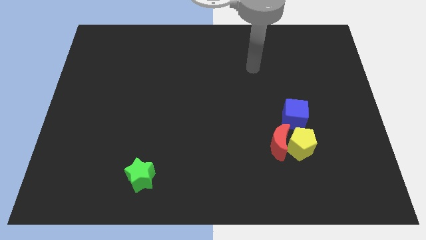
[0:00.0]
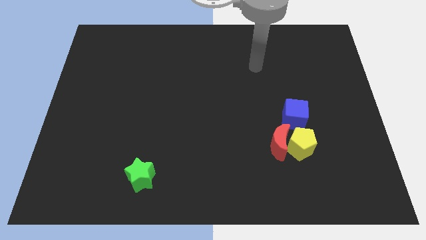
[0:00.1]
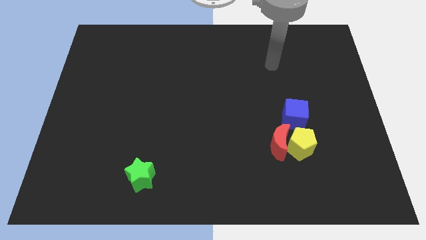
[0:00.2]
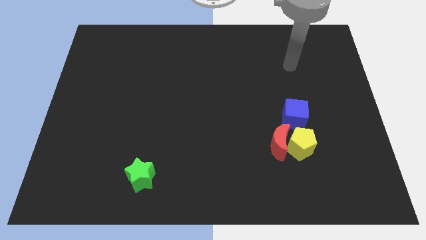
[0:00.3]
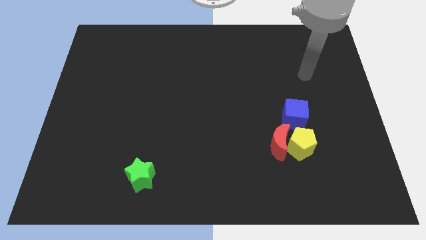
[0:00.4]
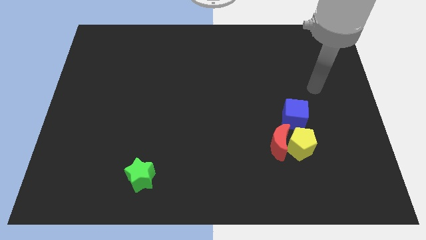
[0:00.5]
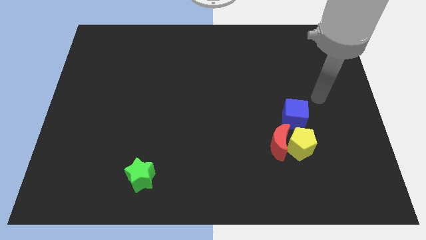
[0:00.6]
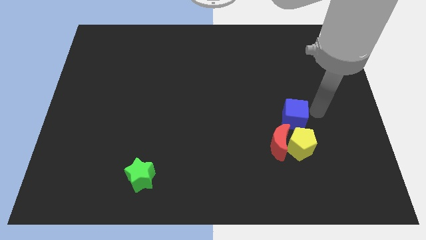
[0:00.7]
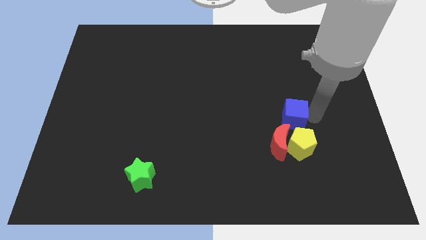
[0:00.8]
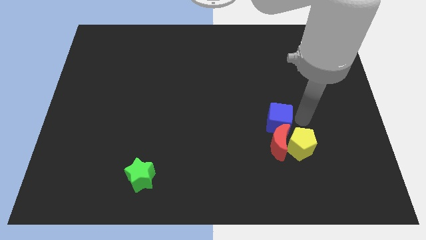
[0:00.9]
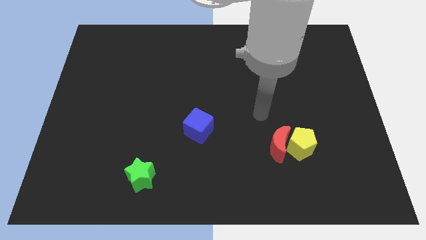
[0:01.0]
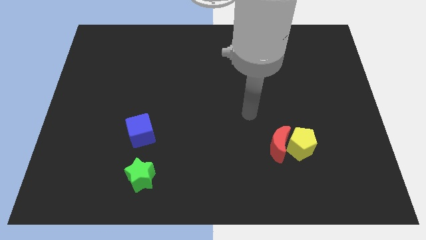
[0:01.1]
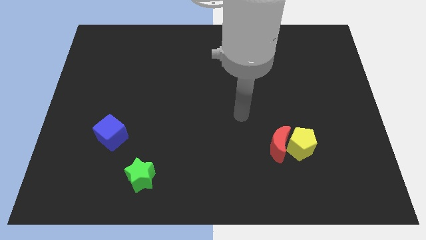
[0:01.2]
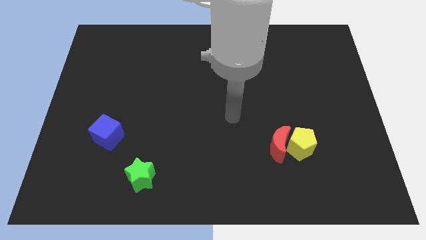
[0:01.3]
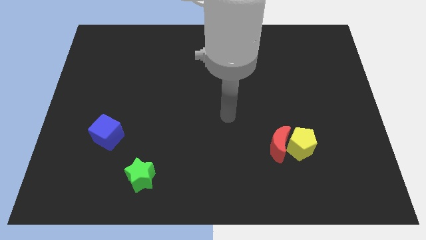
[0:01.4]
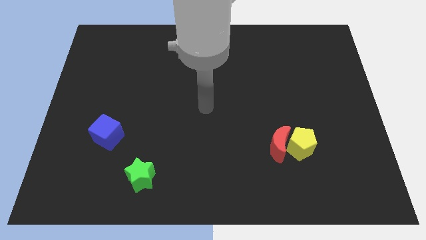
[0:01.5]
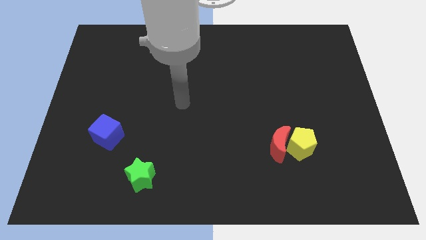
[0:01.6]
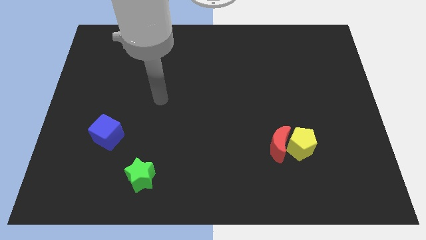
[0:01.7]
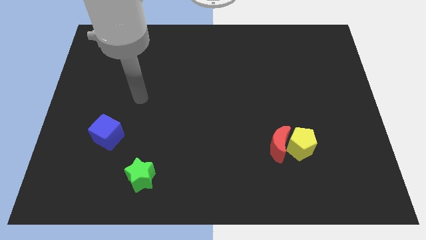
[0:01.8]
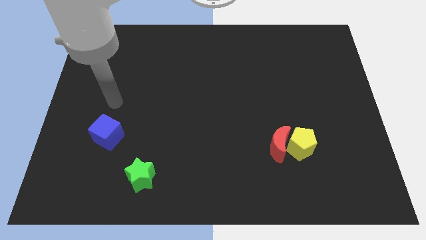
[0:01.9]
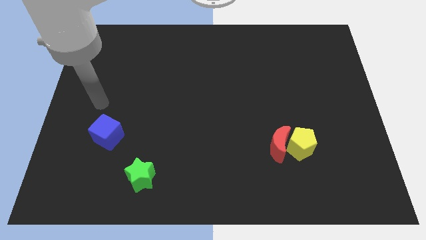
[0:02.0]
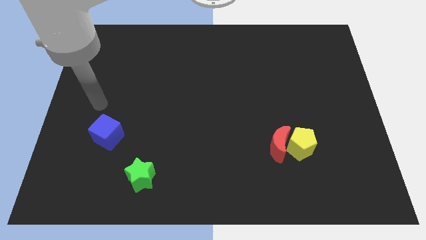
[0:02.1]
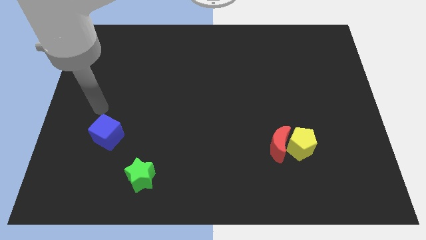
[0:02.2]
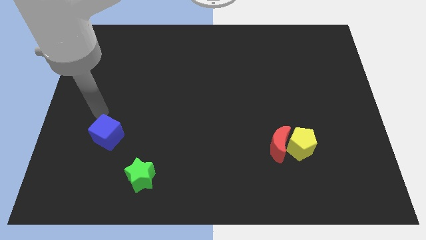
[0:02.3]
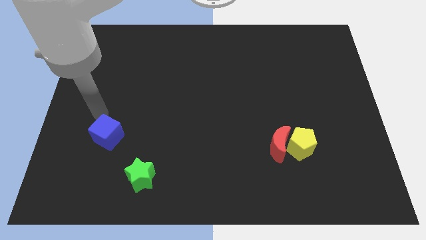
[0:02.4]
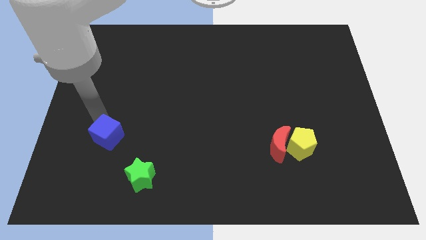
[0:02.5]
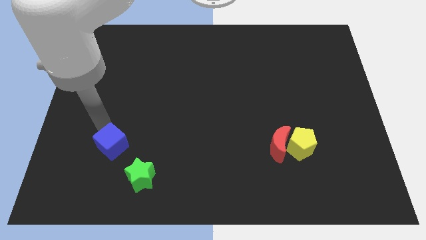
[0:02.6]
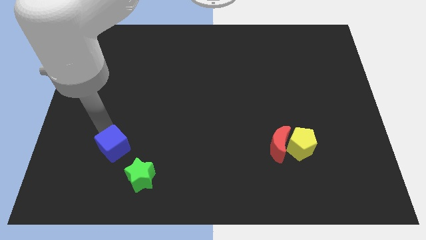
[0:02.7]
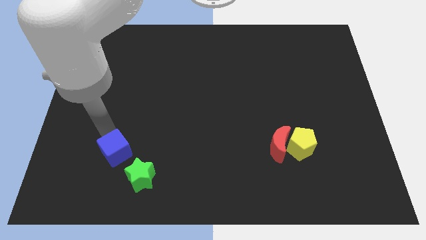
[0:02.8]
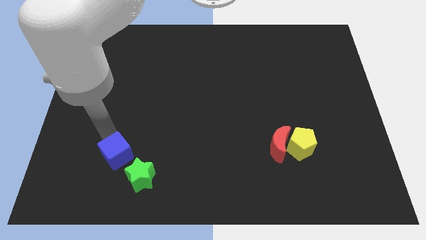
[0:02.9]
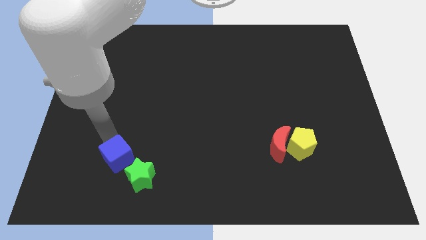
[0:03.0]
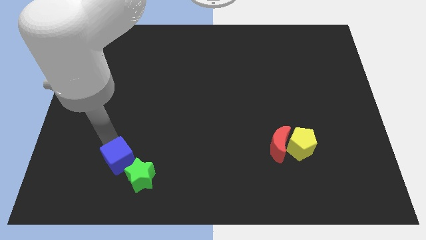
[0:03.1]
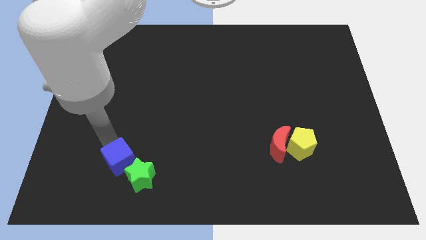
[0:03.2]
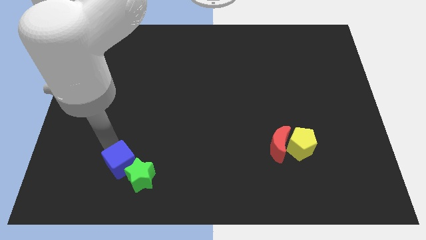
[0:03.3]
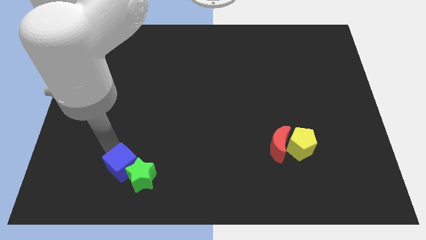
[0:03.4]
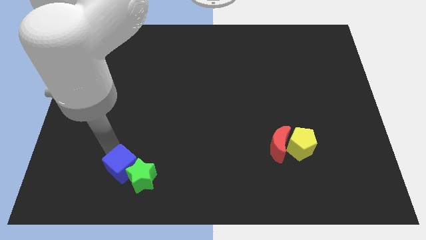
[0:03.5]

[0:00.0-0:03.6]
put the blue block towards the green star

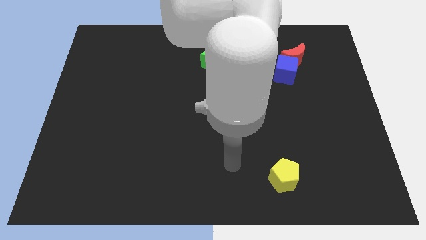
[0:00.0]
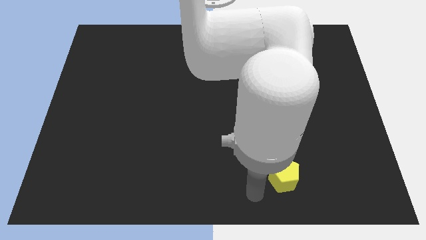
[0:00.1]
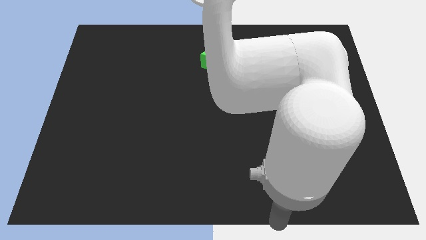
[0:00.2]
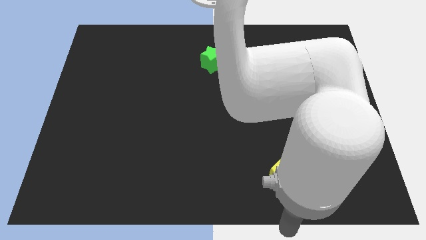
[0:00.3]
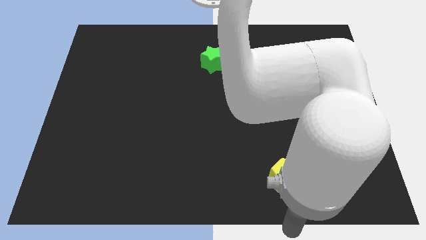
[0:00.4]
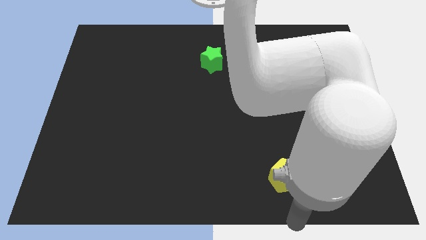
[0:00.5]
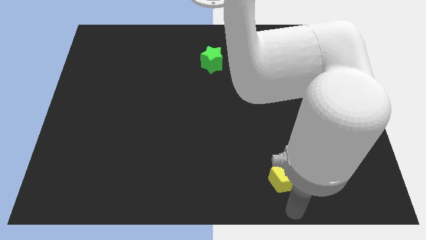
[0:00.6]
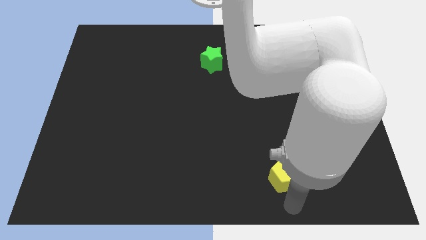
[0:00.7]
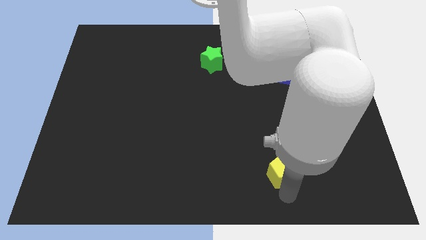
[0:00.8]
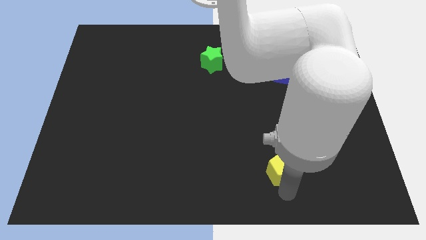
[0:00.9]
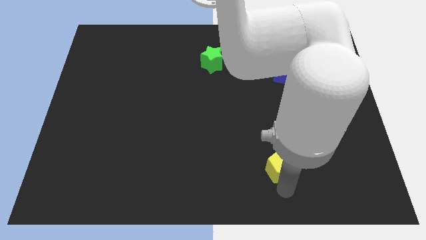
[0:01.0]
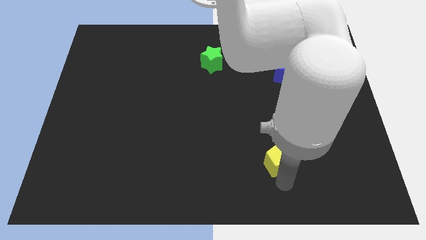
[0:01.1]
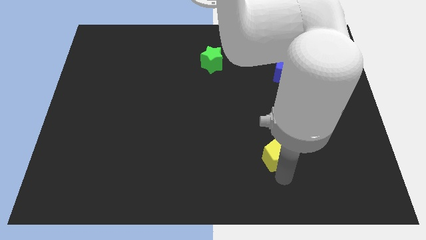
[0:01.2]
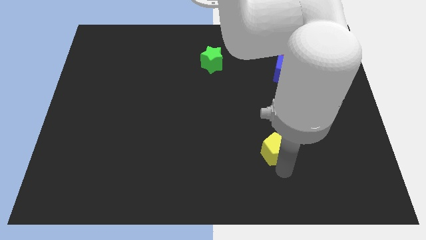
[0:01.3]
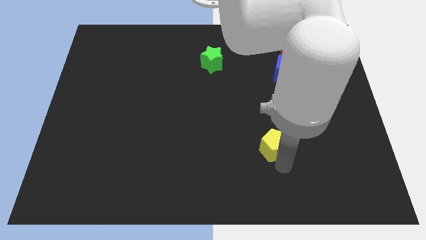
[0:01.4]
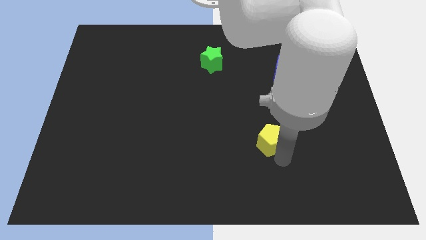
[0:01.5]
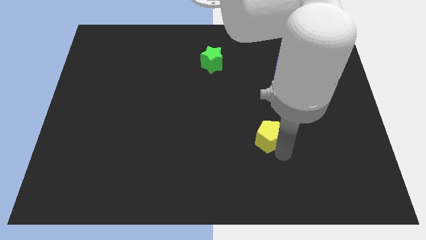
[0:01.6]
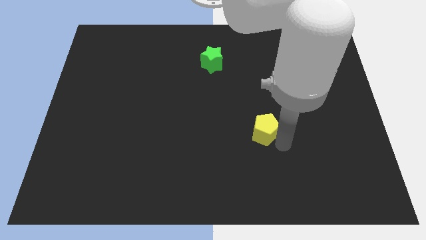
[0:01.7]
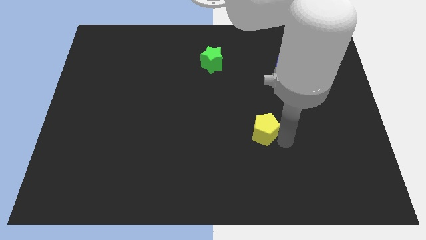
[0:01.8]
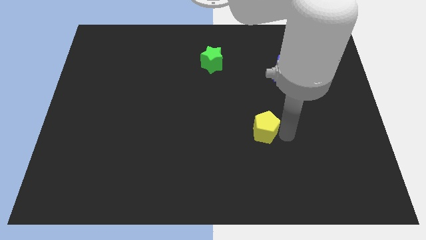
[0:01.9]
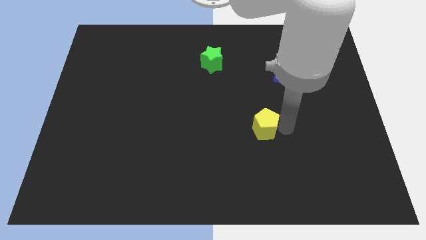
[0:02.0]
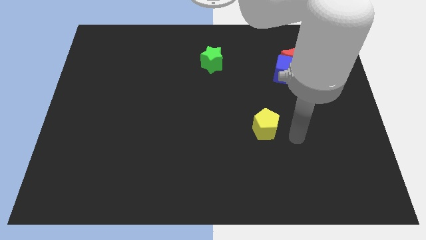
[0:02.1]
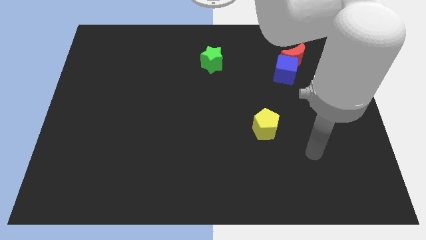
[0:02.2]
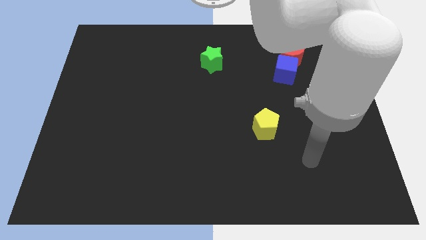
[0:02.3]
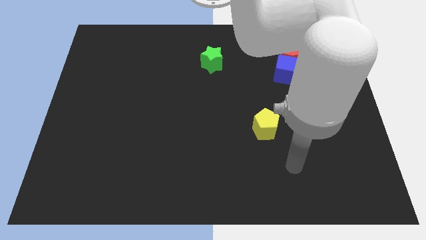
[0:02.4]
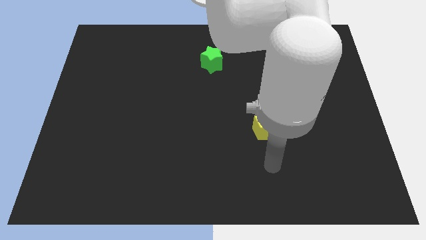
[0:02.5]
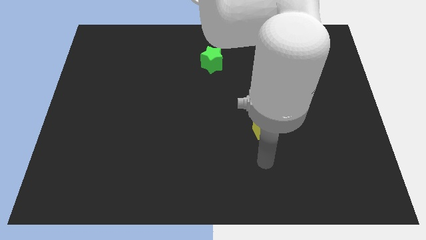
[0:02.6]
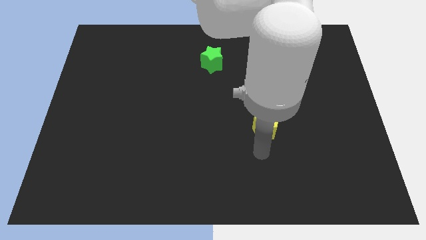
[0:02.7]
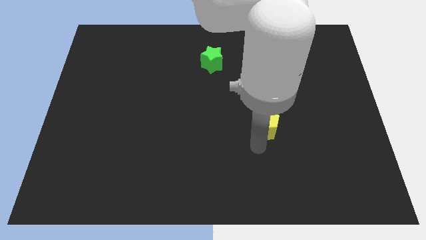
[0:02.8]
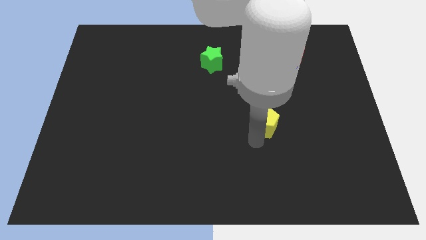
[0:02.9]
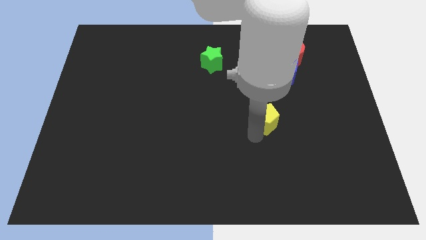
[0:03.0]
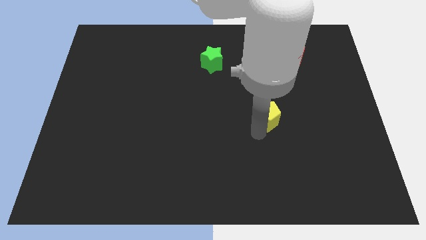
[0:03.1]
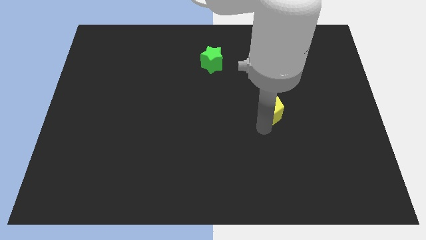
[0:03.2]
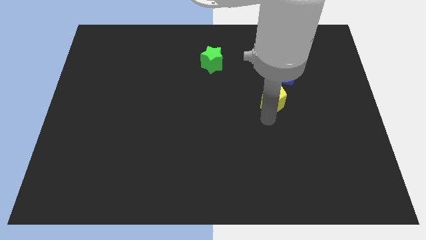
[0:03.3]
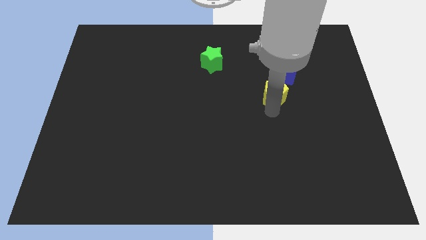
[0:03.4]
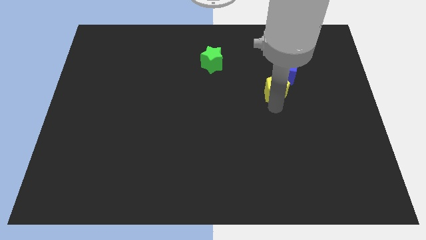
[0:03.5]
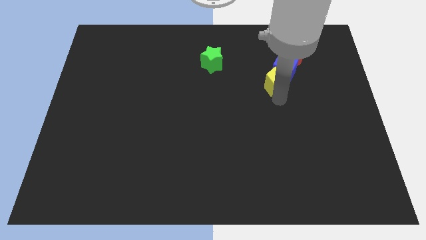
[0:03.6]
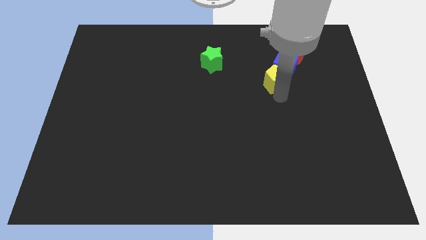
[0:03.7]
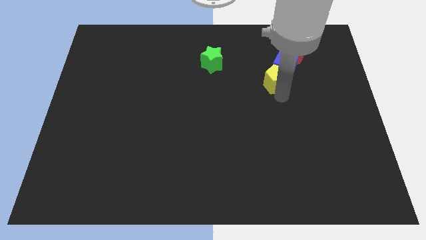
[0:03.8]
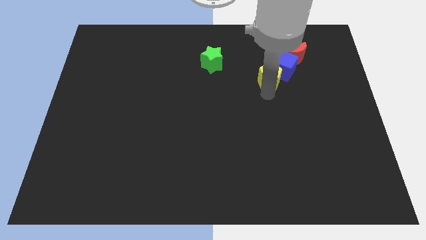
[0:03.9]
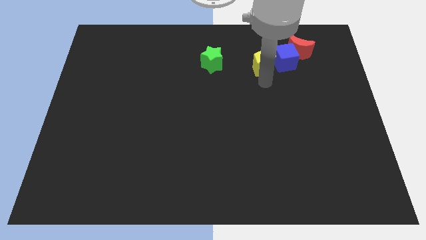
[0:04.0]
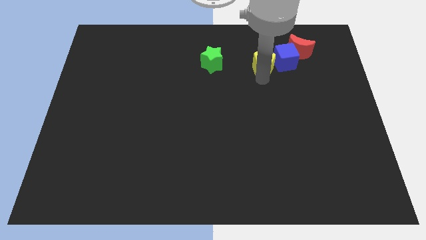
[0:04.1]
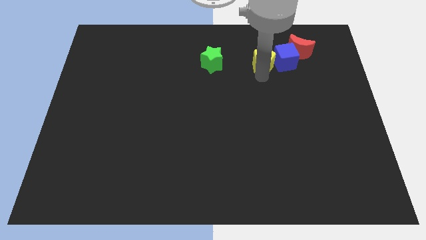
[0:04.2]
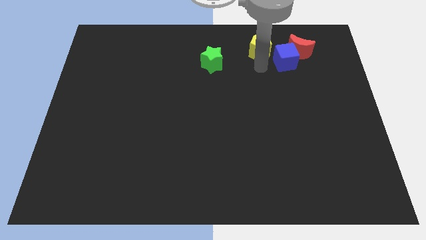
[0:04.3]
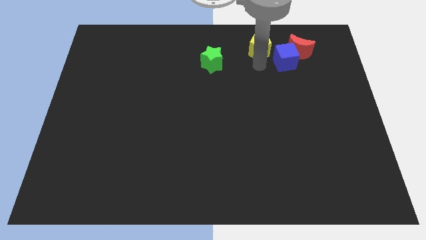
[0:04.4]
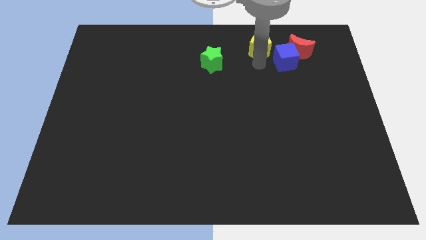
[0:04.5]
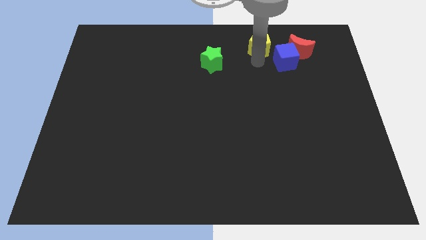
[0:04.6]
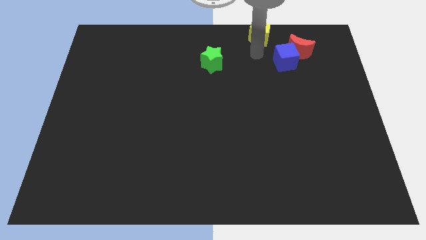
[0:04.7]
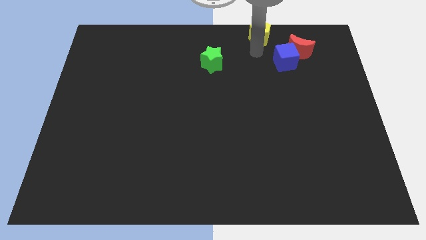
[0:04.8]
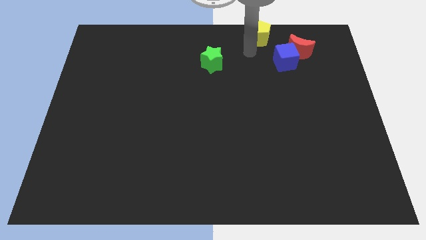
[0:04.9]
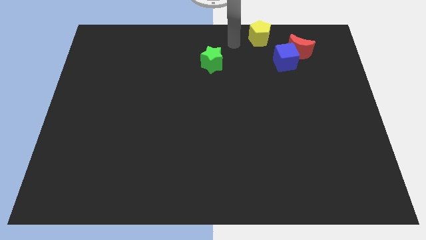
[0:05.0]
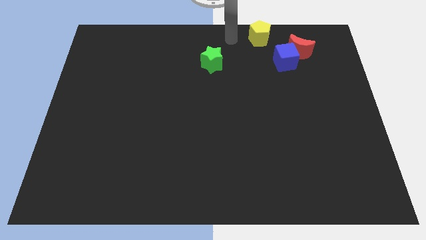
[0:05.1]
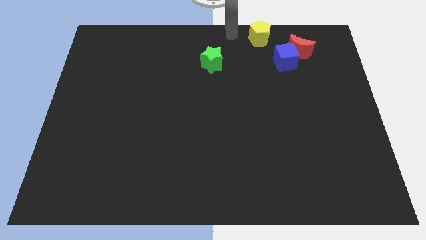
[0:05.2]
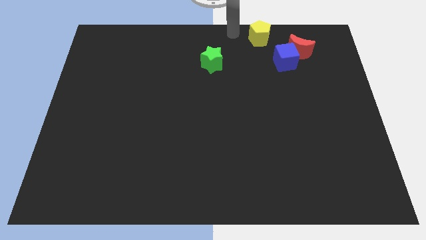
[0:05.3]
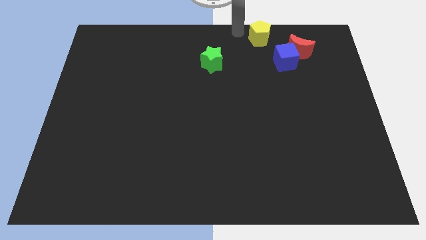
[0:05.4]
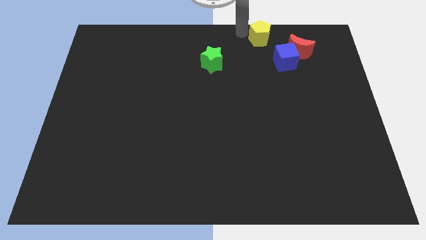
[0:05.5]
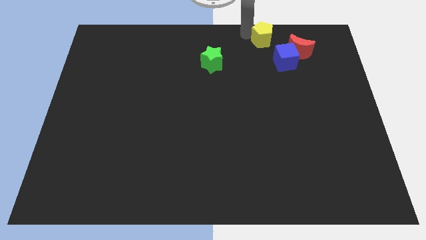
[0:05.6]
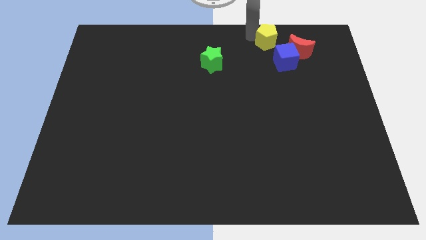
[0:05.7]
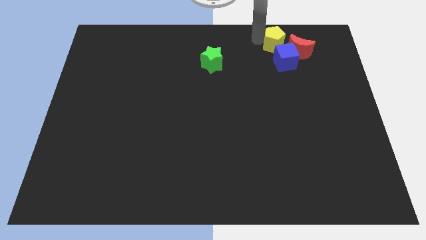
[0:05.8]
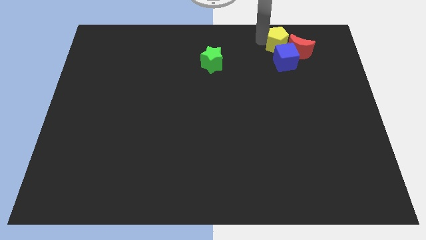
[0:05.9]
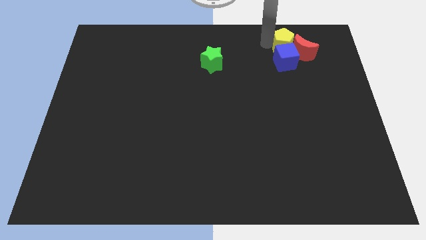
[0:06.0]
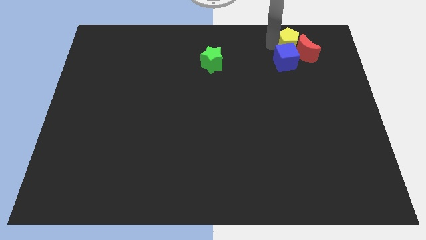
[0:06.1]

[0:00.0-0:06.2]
put the yellow pentagon to the red moon
